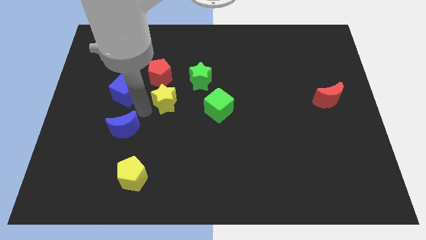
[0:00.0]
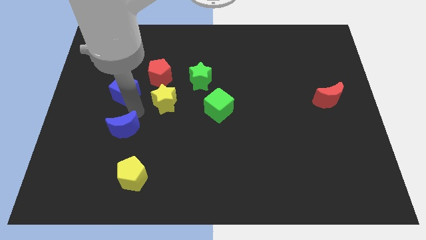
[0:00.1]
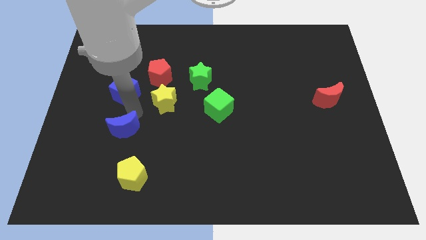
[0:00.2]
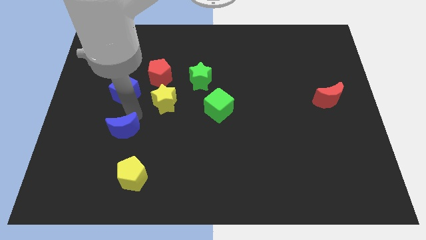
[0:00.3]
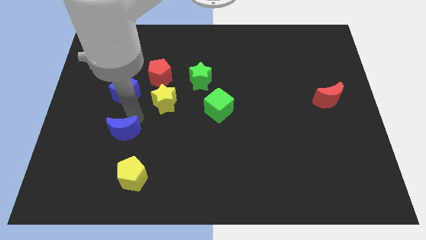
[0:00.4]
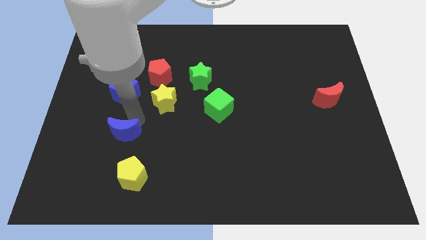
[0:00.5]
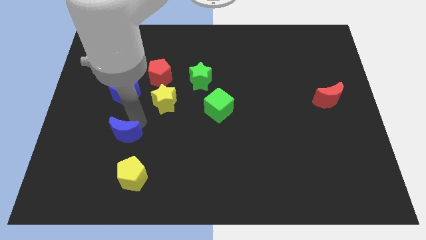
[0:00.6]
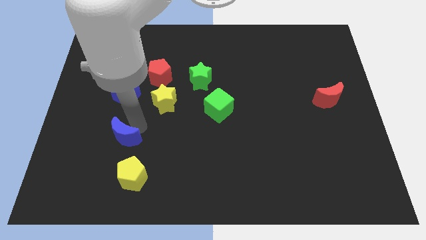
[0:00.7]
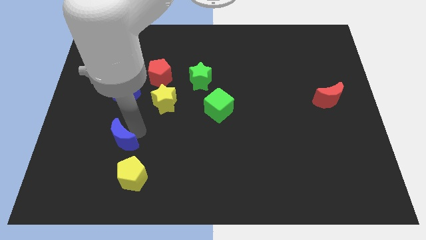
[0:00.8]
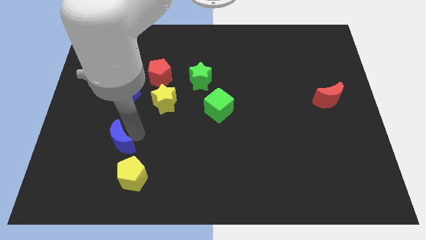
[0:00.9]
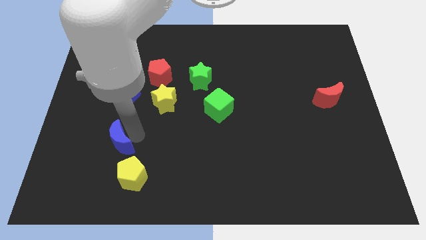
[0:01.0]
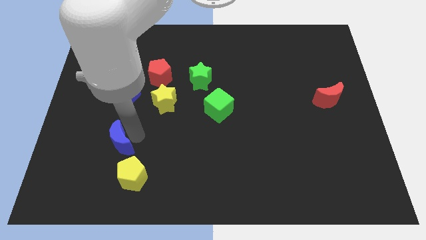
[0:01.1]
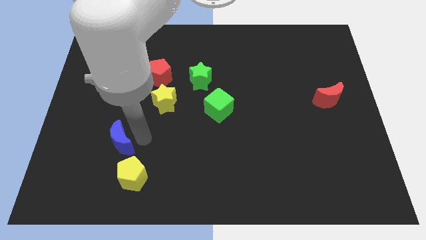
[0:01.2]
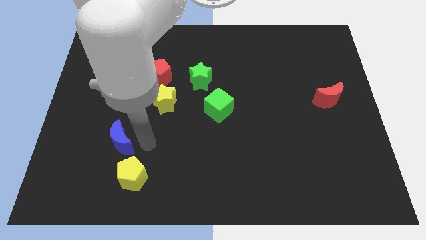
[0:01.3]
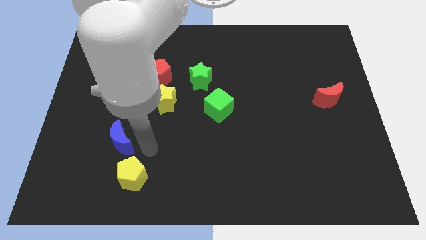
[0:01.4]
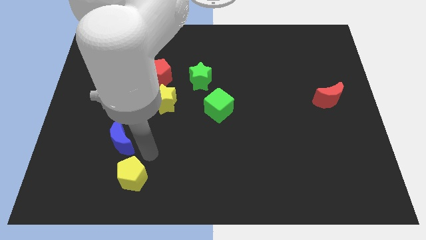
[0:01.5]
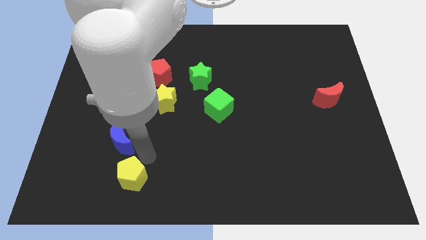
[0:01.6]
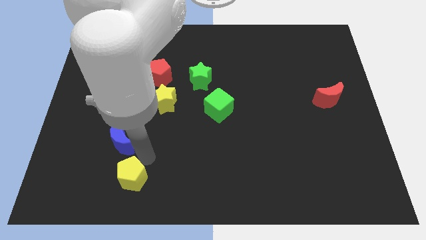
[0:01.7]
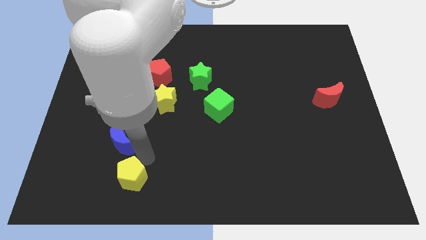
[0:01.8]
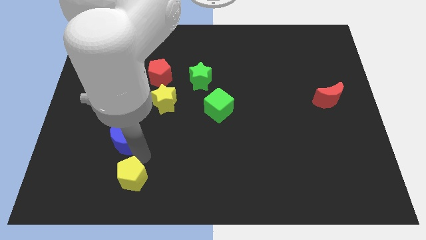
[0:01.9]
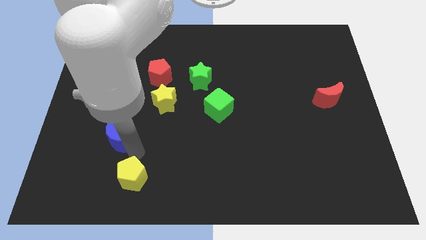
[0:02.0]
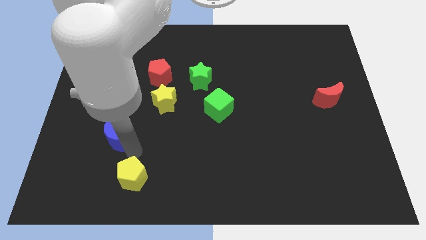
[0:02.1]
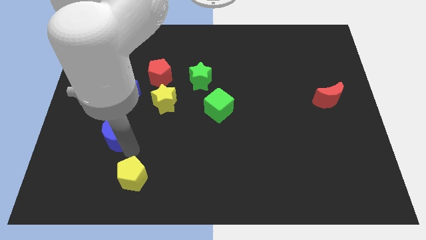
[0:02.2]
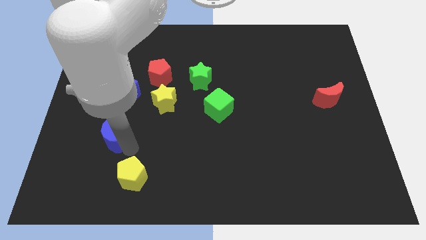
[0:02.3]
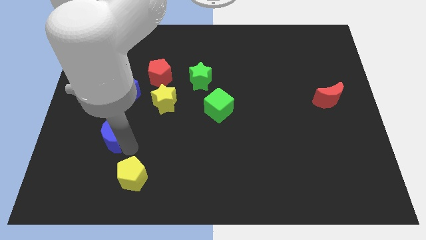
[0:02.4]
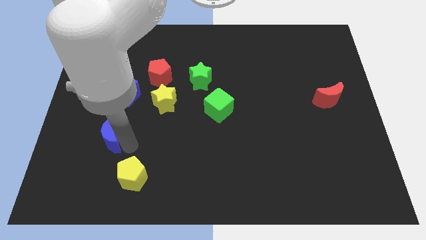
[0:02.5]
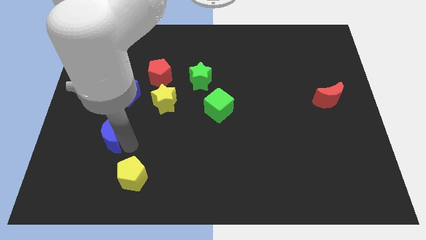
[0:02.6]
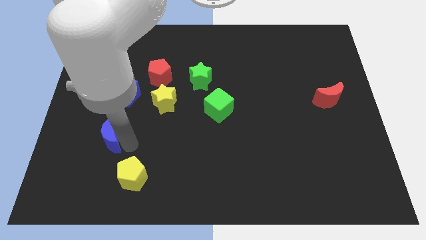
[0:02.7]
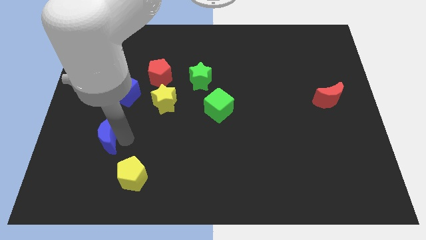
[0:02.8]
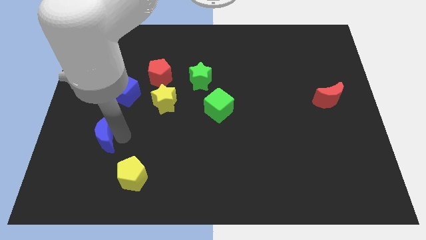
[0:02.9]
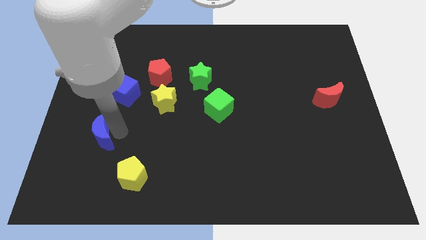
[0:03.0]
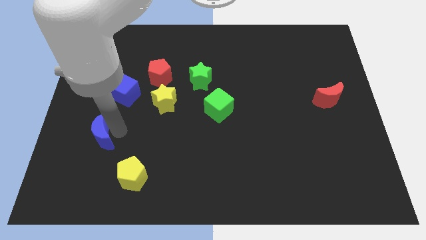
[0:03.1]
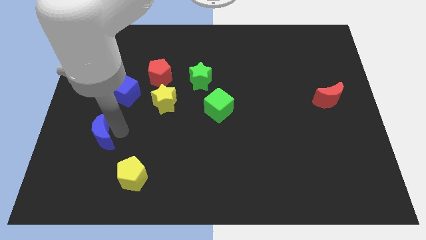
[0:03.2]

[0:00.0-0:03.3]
push blue crescent towards left

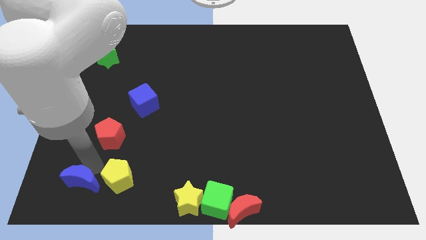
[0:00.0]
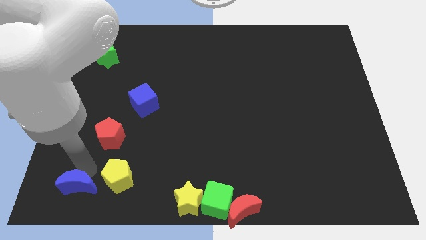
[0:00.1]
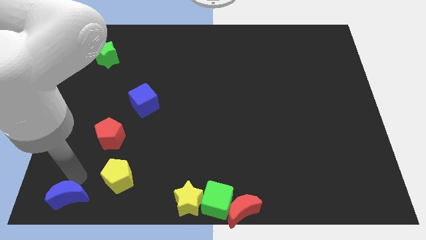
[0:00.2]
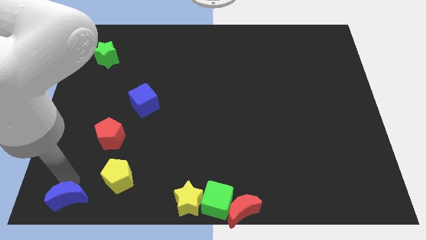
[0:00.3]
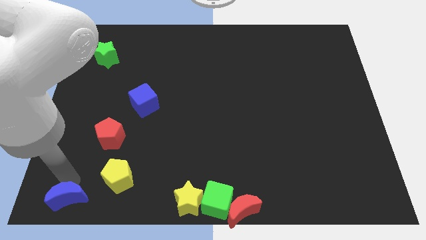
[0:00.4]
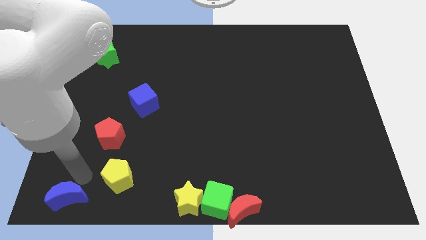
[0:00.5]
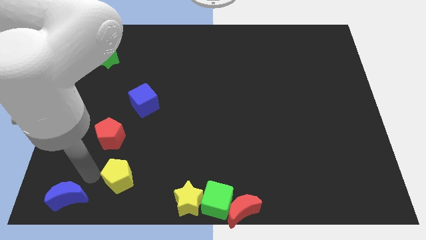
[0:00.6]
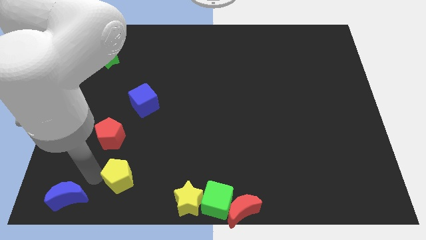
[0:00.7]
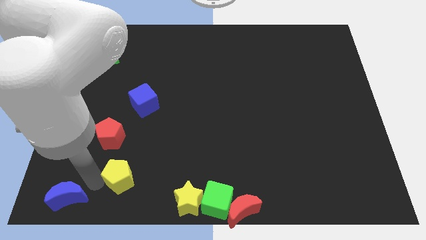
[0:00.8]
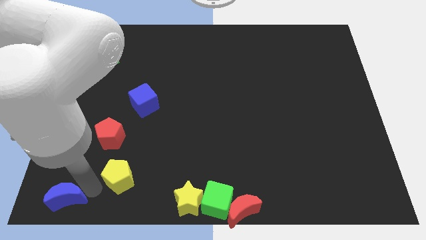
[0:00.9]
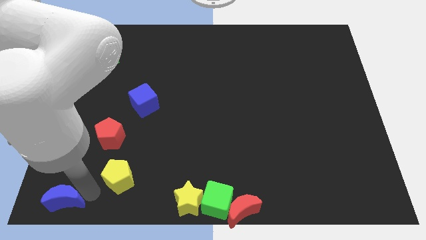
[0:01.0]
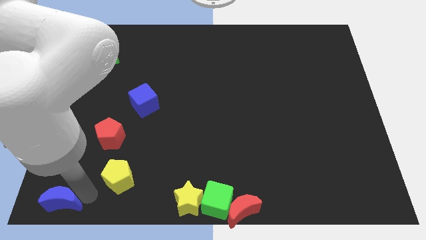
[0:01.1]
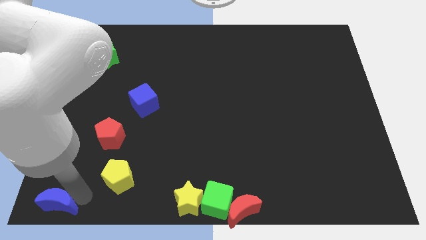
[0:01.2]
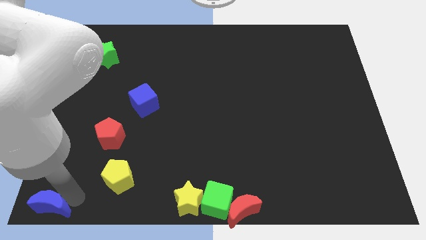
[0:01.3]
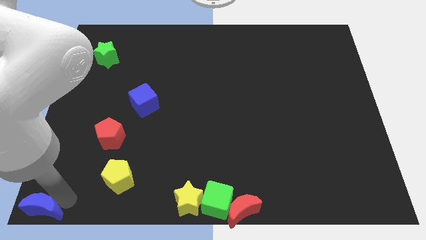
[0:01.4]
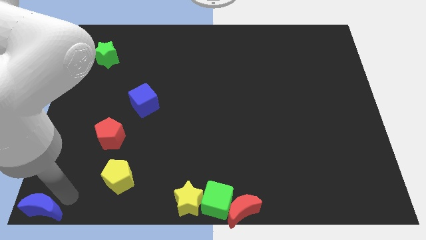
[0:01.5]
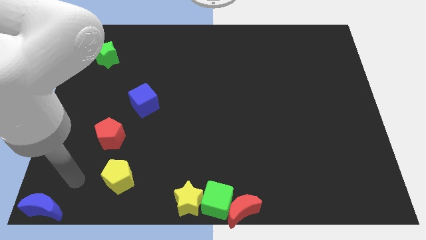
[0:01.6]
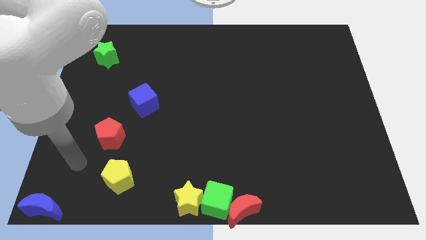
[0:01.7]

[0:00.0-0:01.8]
place the blue moon to the bottom left corner

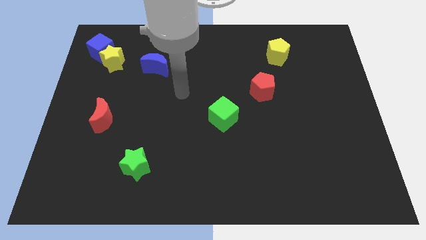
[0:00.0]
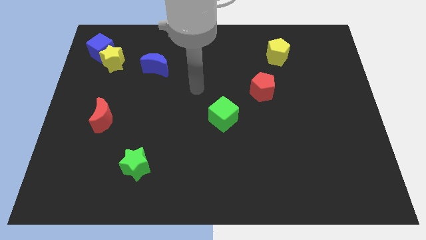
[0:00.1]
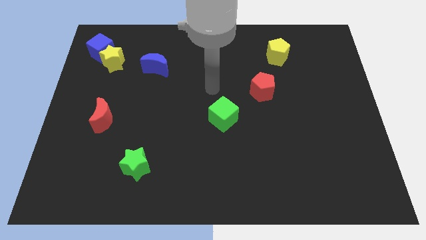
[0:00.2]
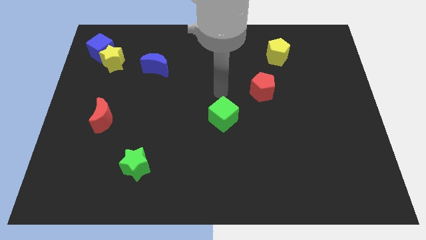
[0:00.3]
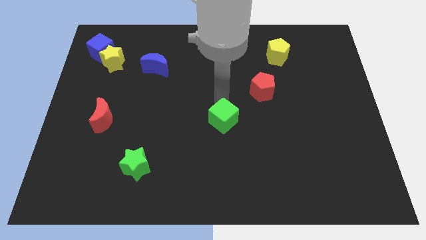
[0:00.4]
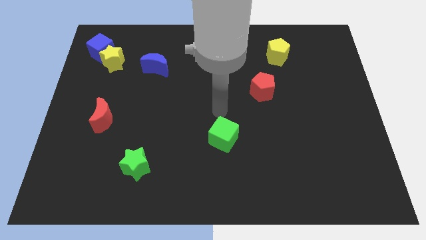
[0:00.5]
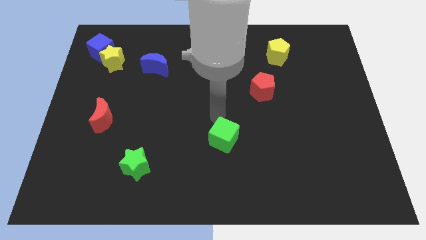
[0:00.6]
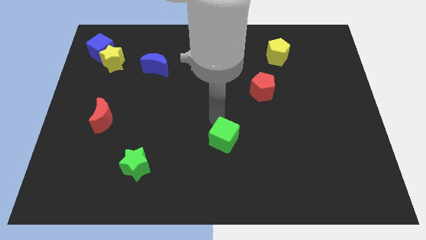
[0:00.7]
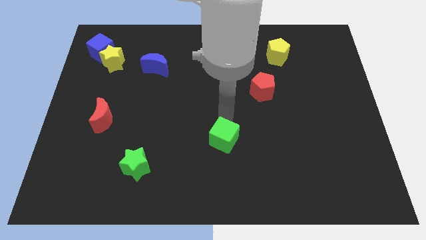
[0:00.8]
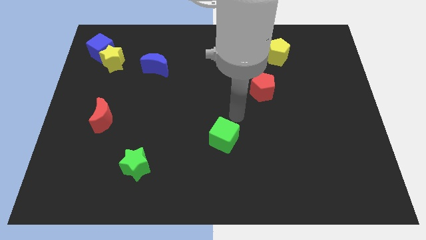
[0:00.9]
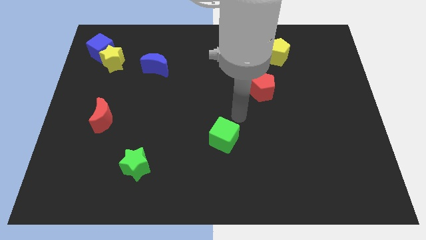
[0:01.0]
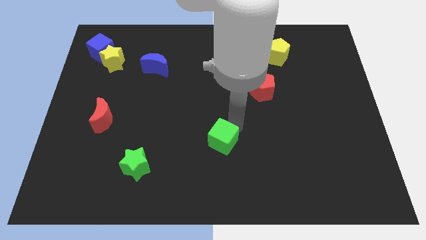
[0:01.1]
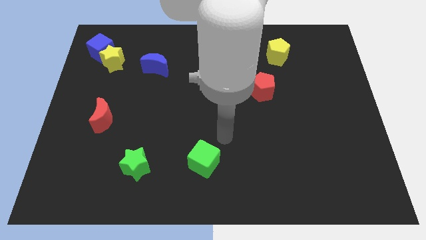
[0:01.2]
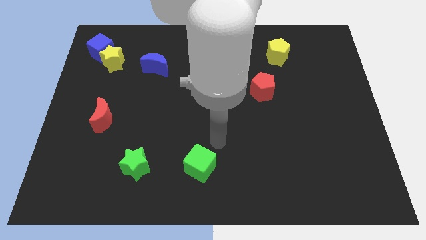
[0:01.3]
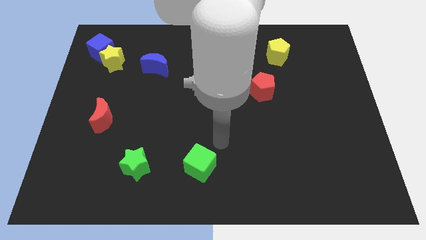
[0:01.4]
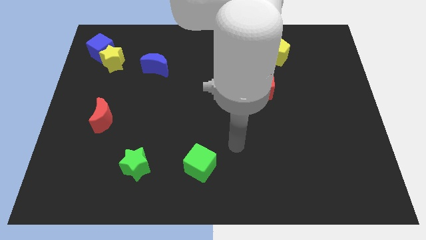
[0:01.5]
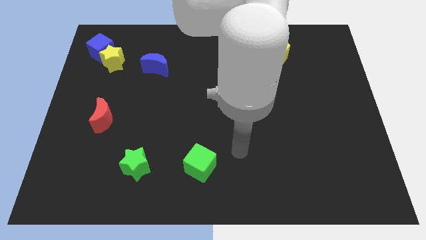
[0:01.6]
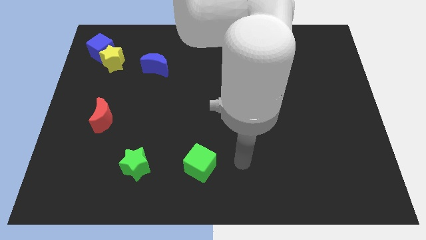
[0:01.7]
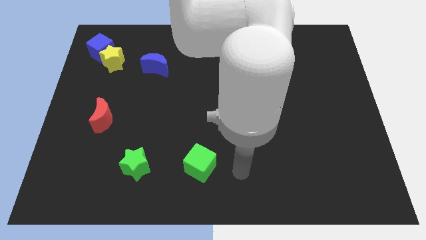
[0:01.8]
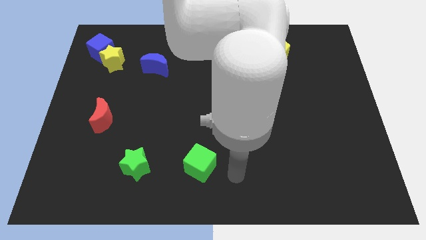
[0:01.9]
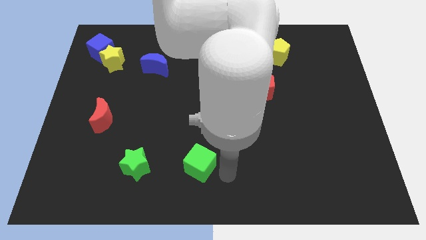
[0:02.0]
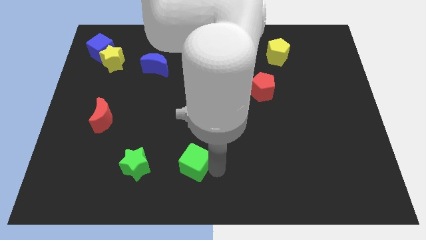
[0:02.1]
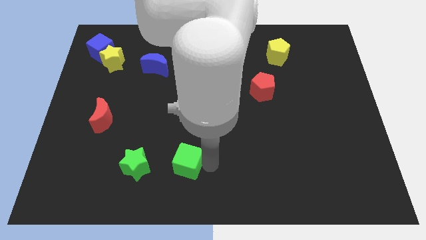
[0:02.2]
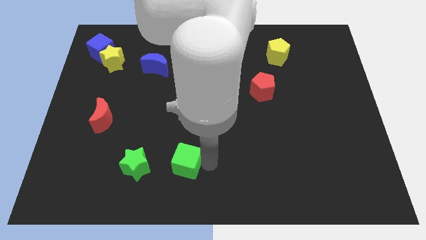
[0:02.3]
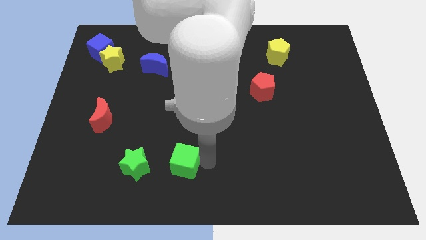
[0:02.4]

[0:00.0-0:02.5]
place the green cube parallel to green star

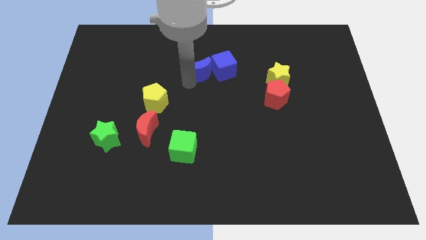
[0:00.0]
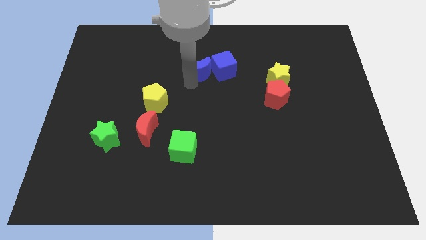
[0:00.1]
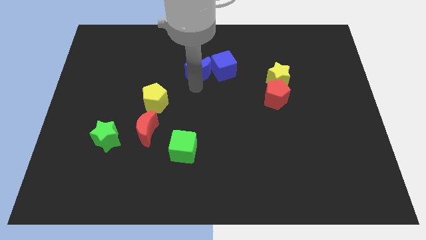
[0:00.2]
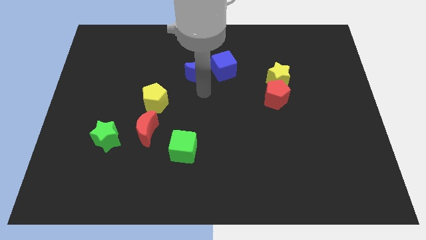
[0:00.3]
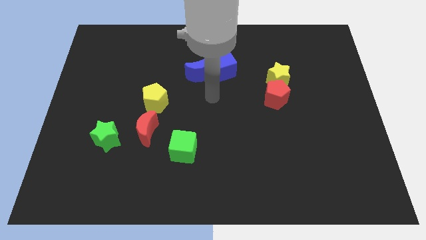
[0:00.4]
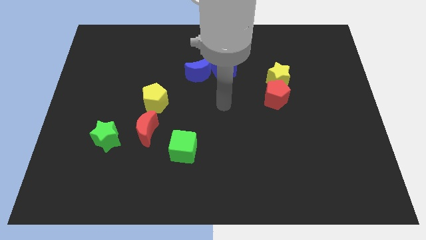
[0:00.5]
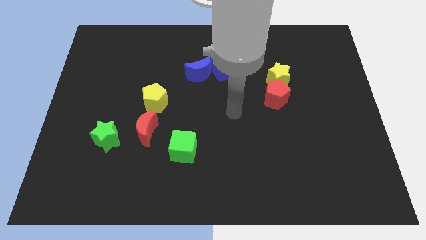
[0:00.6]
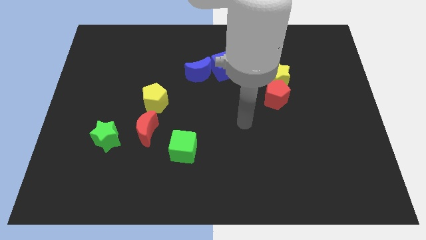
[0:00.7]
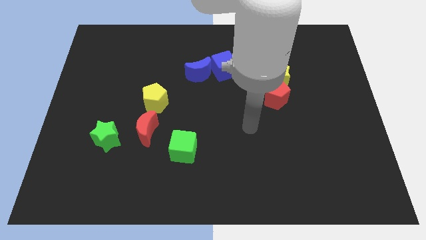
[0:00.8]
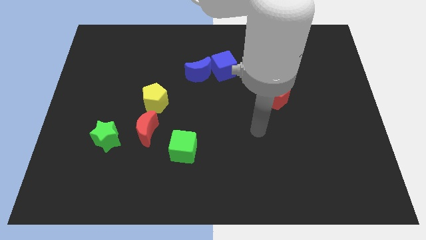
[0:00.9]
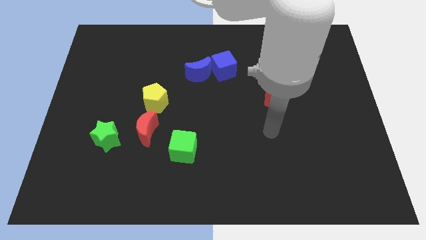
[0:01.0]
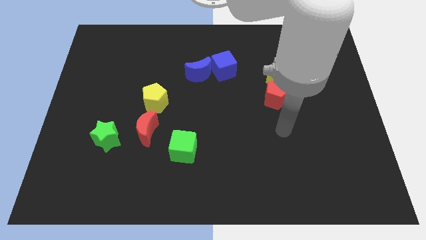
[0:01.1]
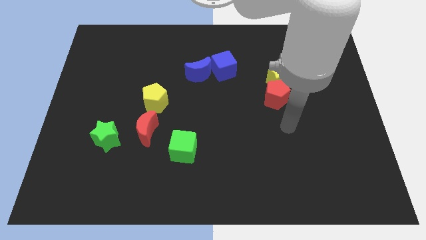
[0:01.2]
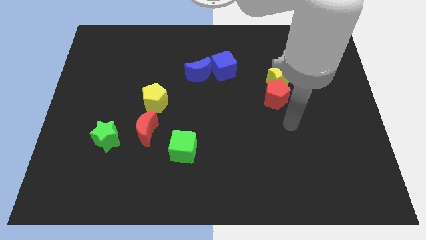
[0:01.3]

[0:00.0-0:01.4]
move the arm away from the blue moon

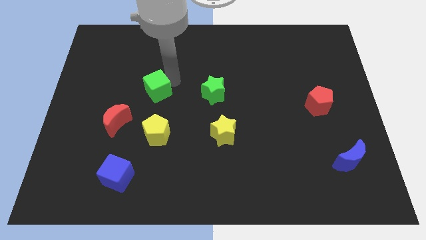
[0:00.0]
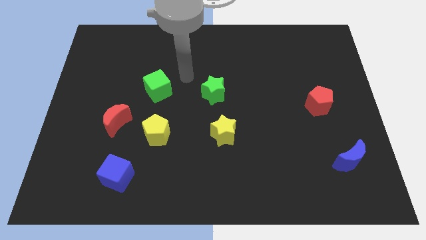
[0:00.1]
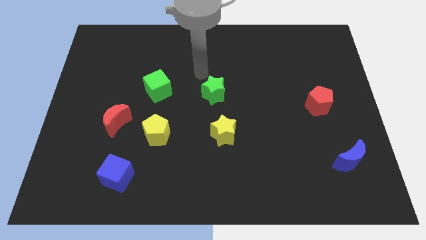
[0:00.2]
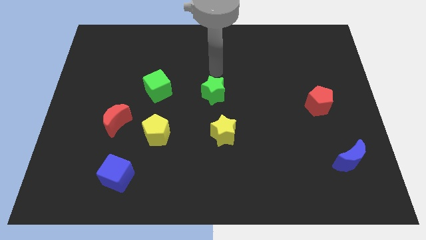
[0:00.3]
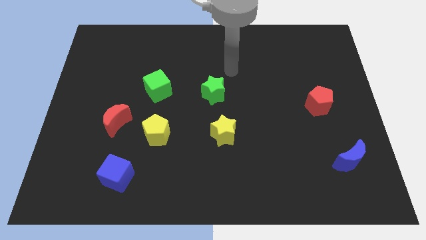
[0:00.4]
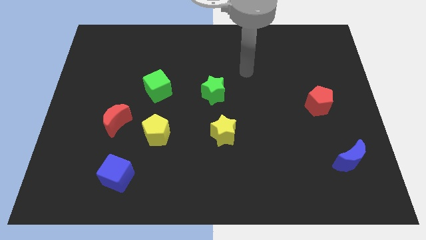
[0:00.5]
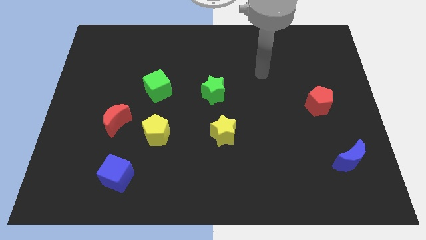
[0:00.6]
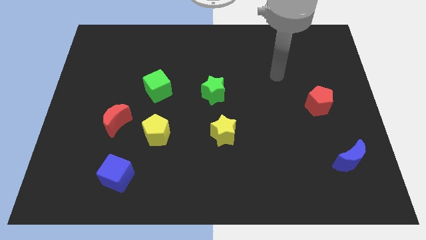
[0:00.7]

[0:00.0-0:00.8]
move your arm away from the green cube
